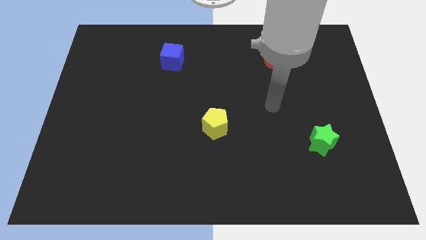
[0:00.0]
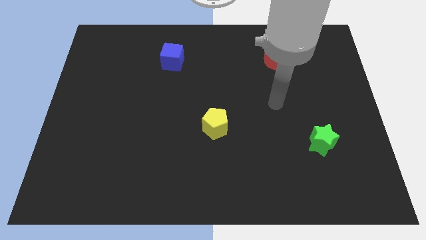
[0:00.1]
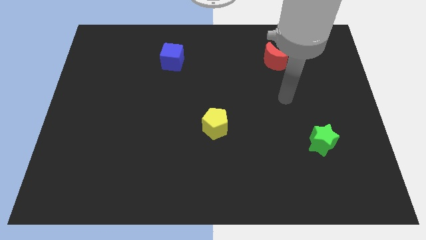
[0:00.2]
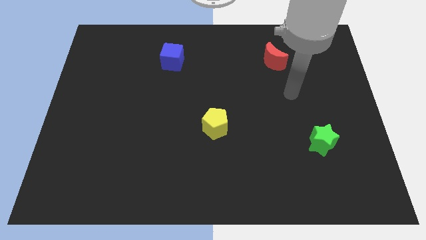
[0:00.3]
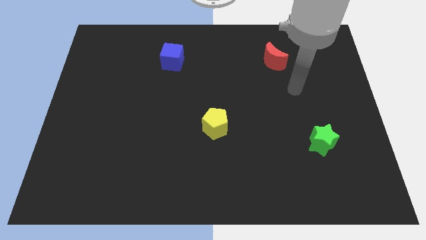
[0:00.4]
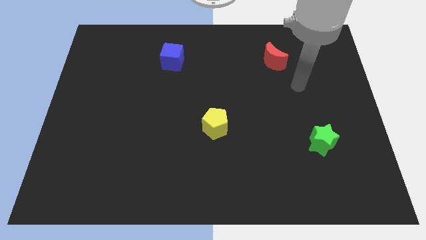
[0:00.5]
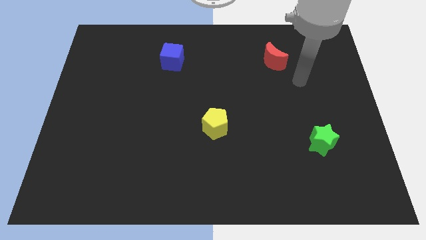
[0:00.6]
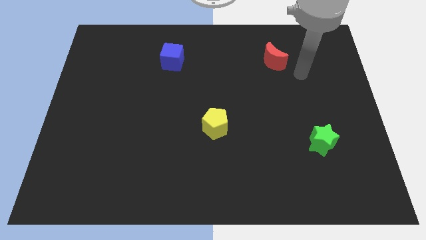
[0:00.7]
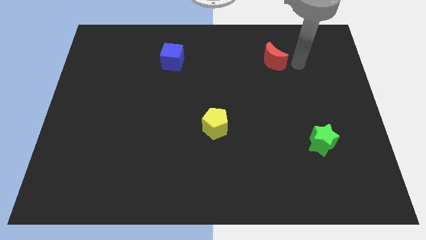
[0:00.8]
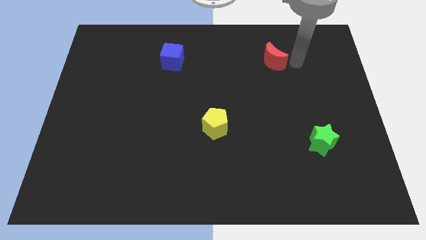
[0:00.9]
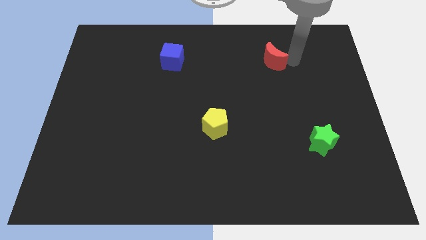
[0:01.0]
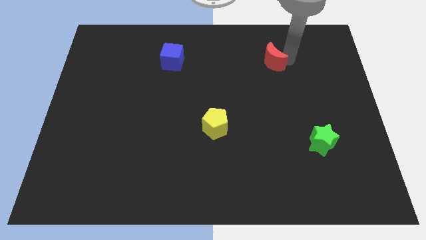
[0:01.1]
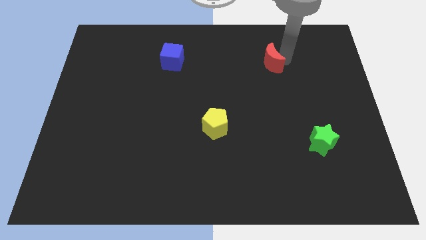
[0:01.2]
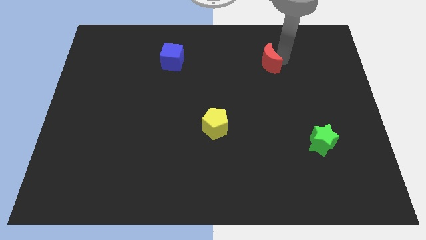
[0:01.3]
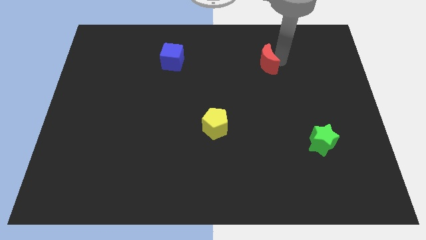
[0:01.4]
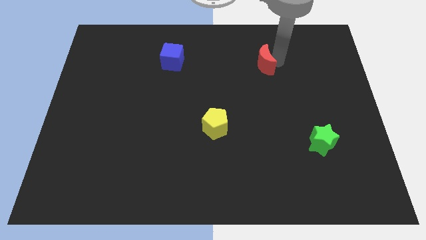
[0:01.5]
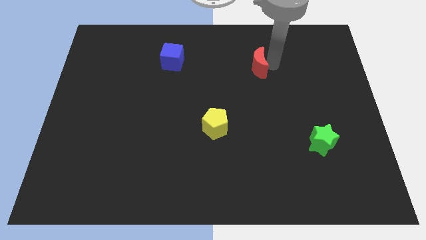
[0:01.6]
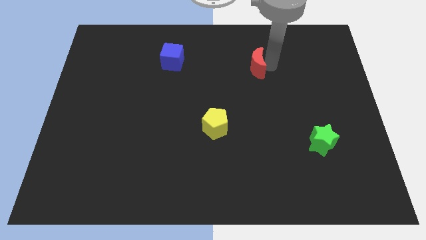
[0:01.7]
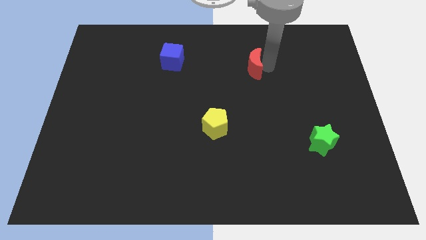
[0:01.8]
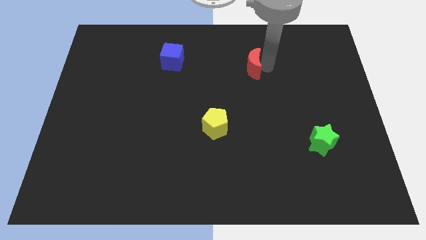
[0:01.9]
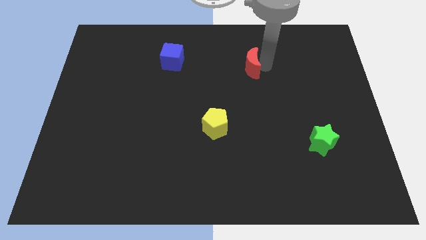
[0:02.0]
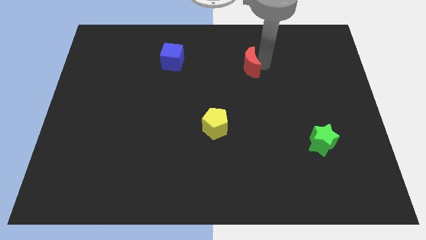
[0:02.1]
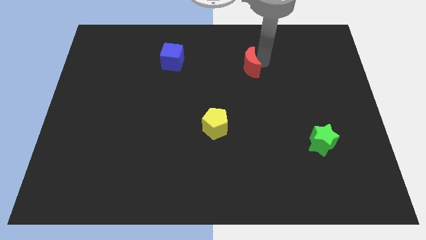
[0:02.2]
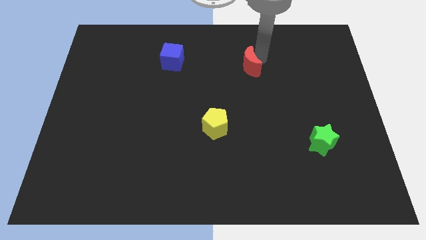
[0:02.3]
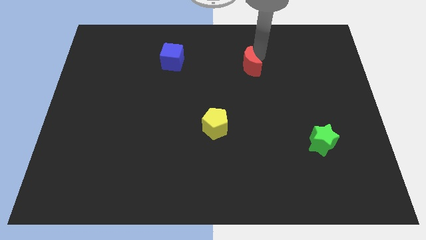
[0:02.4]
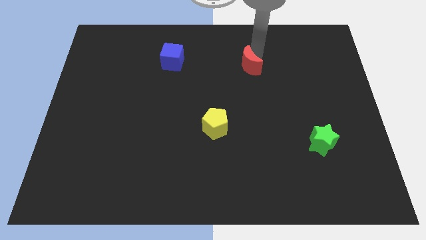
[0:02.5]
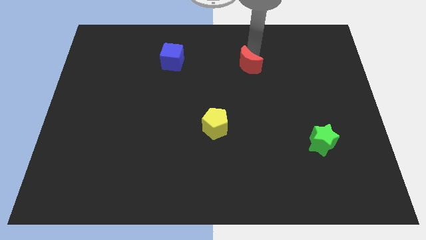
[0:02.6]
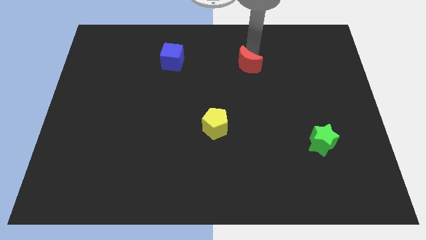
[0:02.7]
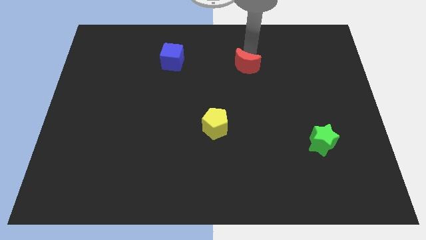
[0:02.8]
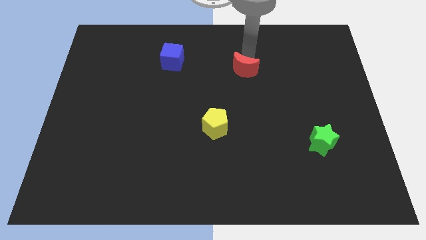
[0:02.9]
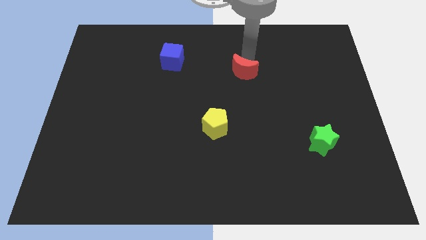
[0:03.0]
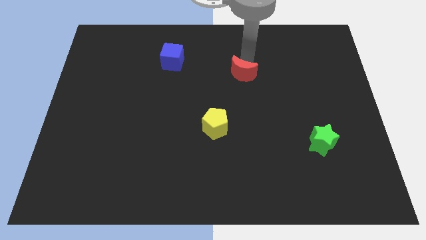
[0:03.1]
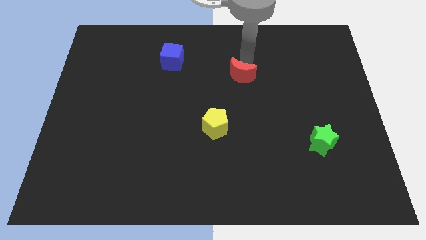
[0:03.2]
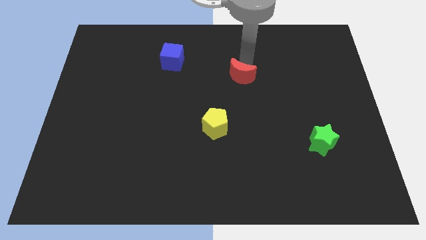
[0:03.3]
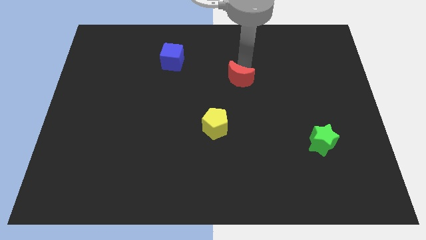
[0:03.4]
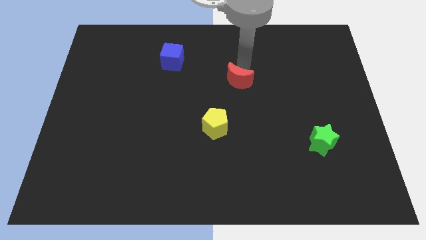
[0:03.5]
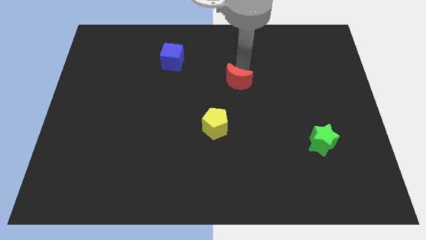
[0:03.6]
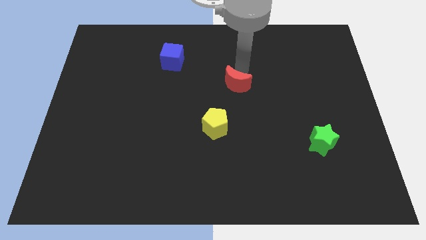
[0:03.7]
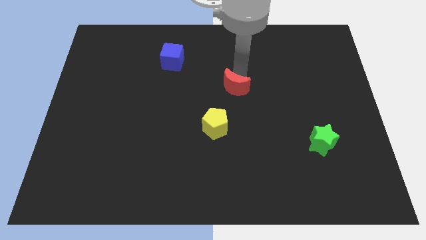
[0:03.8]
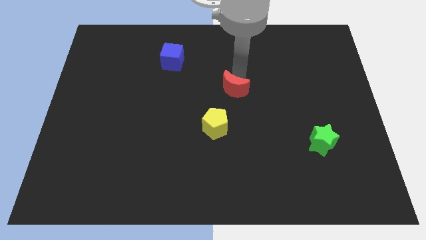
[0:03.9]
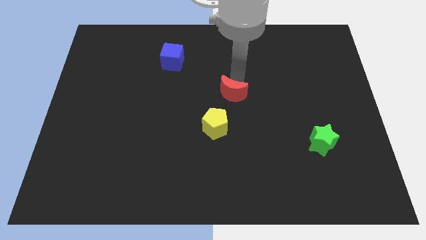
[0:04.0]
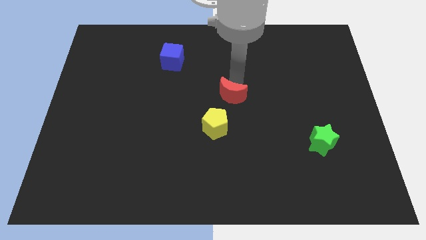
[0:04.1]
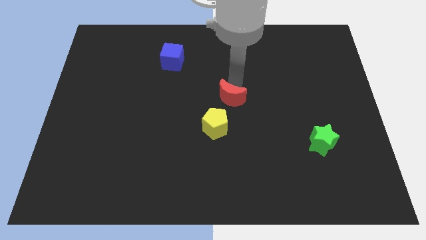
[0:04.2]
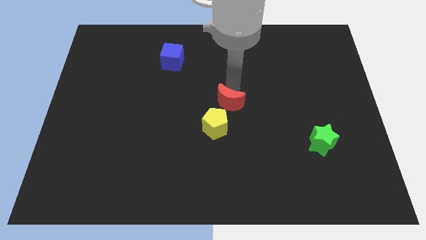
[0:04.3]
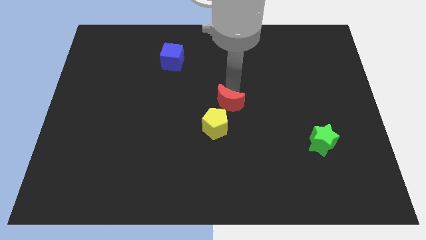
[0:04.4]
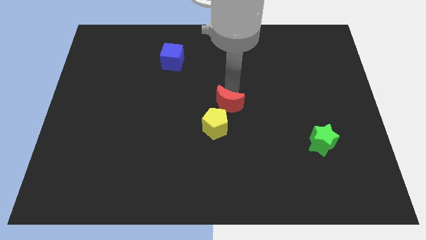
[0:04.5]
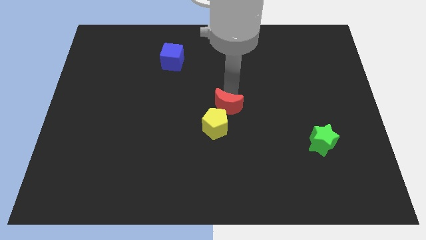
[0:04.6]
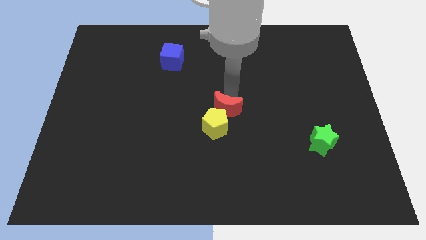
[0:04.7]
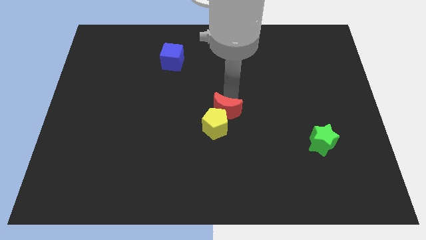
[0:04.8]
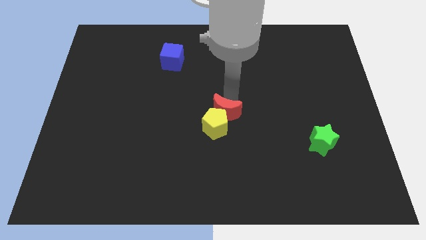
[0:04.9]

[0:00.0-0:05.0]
put the red moon next to the yellow block

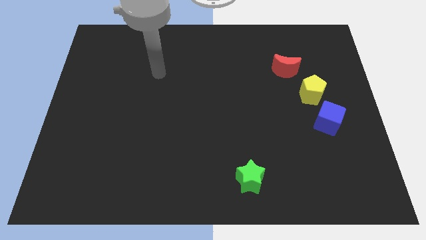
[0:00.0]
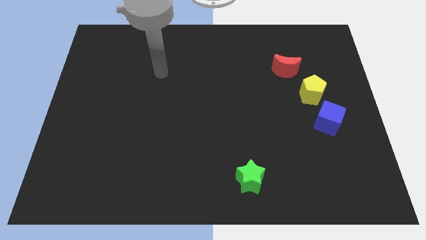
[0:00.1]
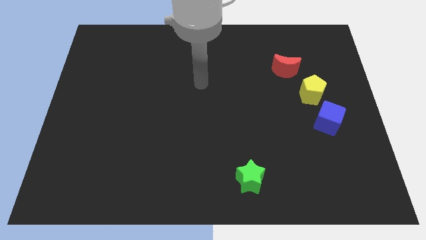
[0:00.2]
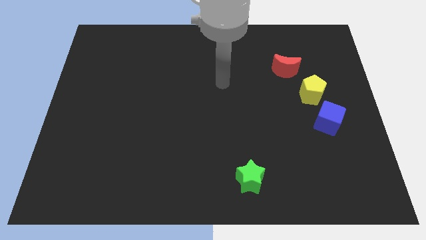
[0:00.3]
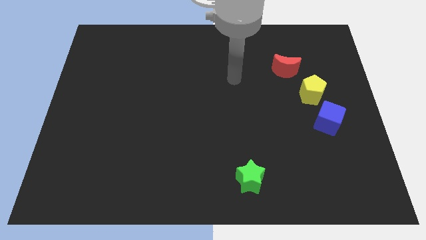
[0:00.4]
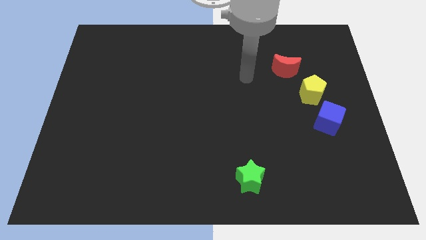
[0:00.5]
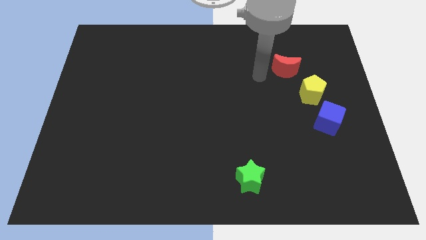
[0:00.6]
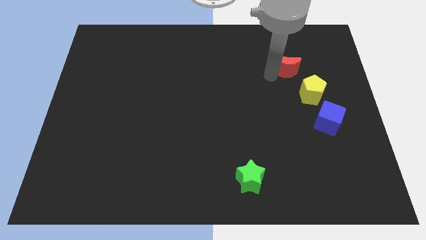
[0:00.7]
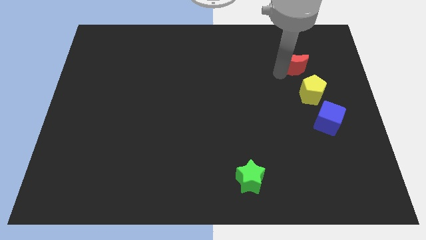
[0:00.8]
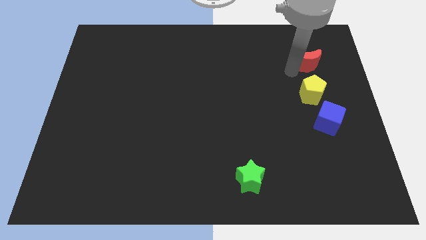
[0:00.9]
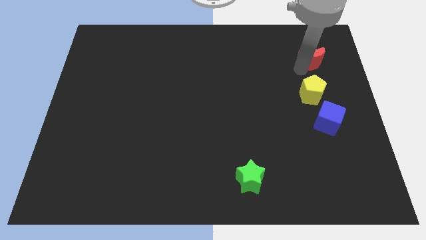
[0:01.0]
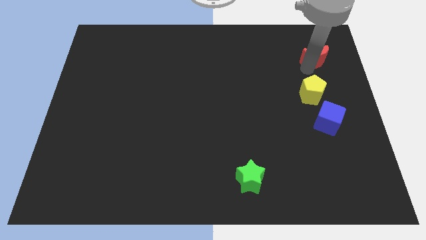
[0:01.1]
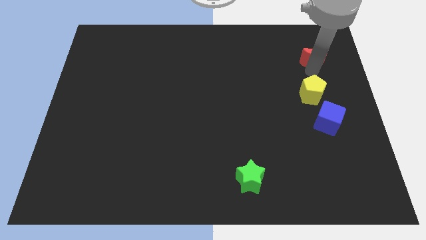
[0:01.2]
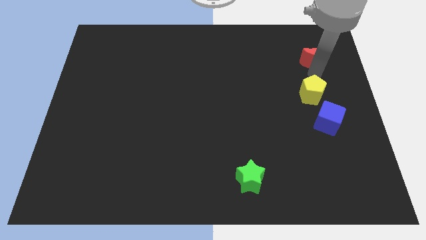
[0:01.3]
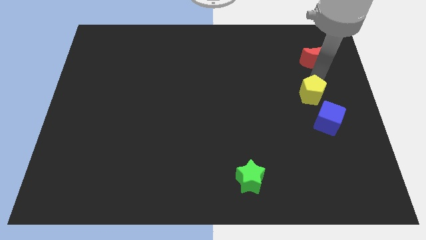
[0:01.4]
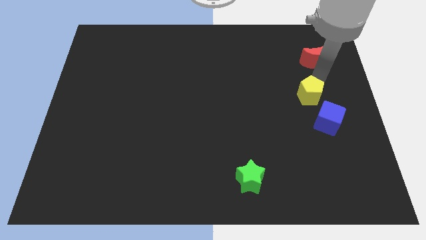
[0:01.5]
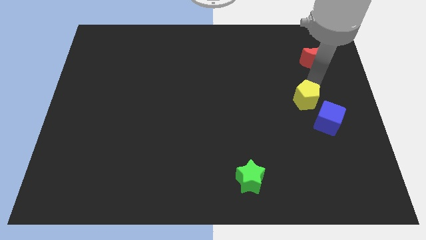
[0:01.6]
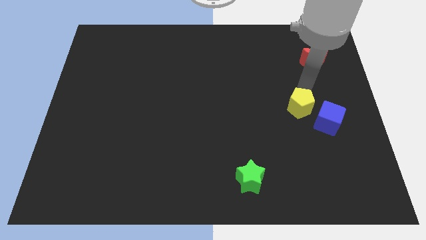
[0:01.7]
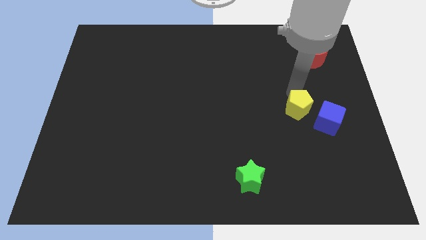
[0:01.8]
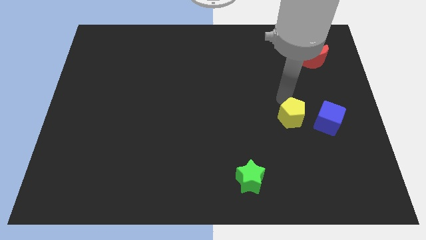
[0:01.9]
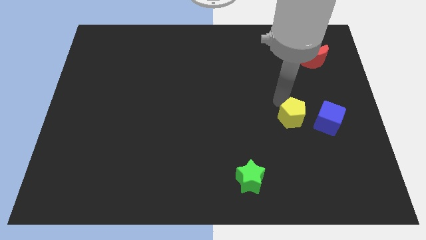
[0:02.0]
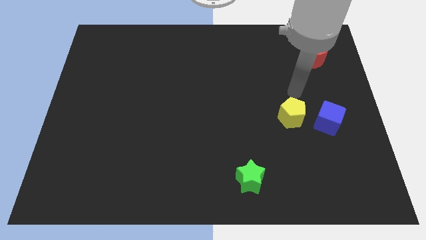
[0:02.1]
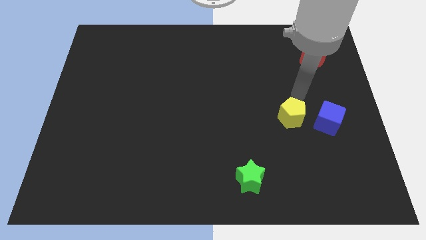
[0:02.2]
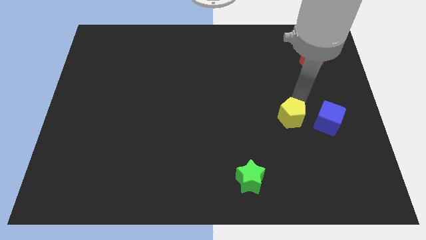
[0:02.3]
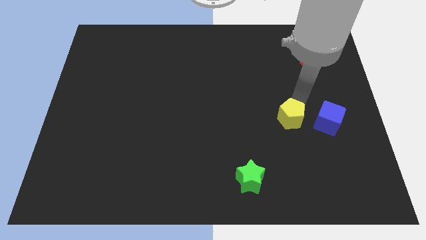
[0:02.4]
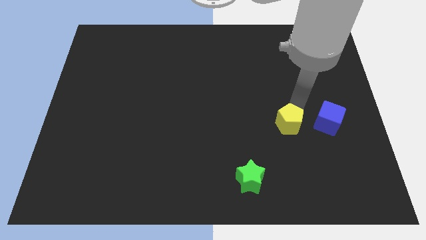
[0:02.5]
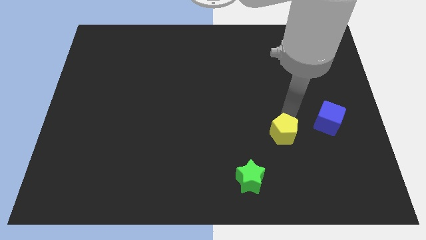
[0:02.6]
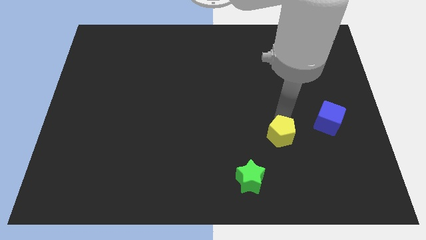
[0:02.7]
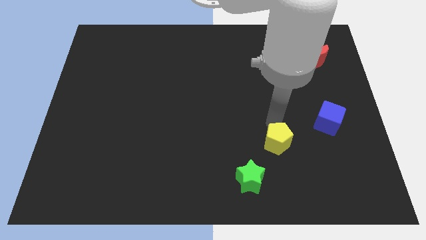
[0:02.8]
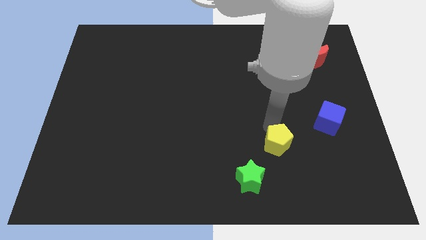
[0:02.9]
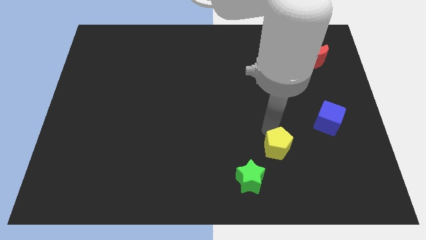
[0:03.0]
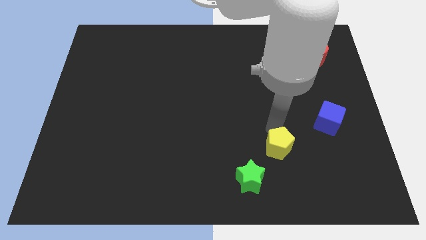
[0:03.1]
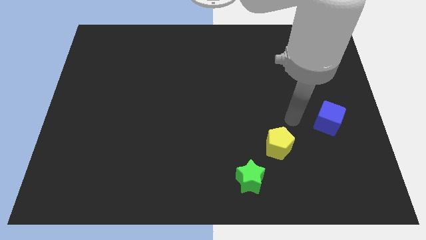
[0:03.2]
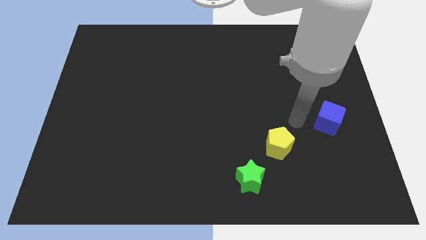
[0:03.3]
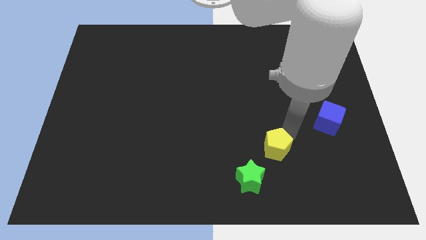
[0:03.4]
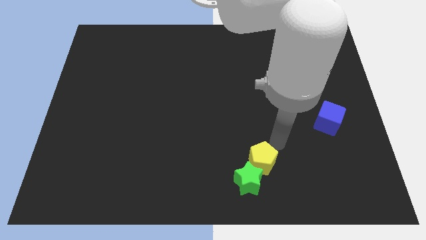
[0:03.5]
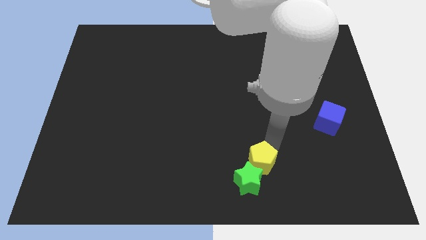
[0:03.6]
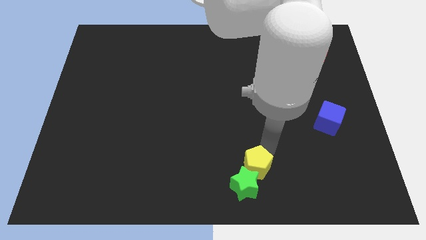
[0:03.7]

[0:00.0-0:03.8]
slide the yellow block to the star
